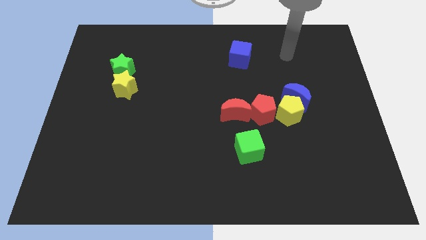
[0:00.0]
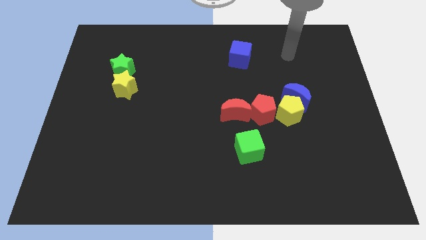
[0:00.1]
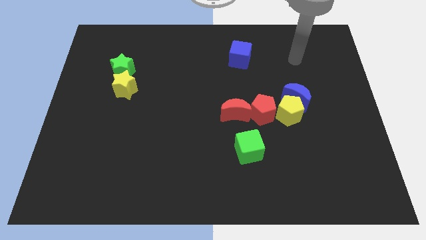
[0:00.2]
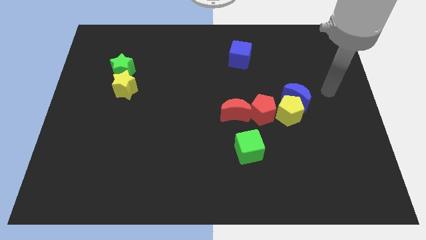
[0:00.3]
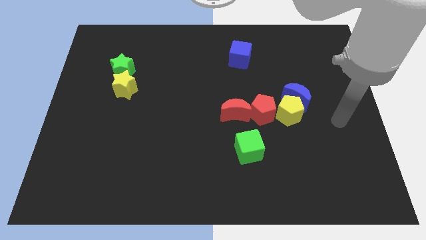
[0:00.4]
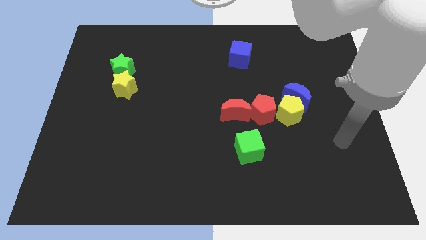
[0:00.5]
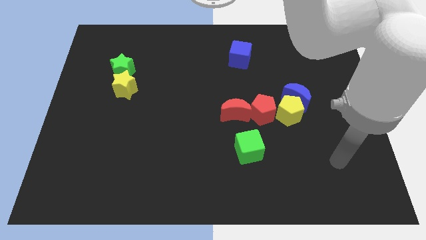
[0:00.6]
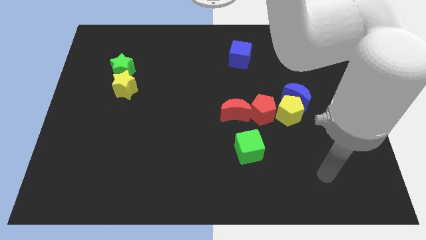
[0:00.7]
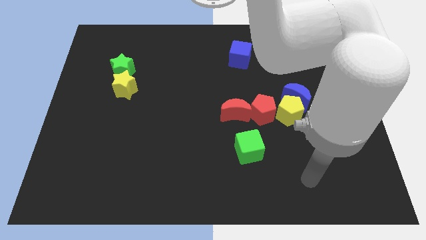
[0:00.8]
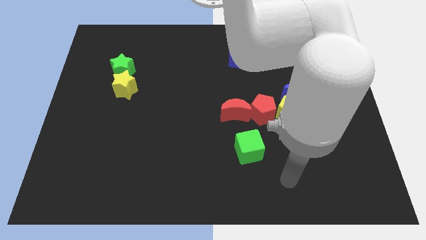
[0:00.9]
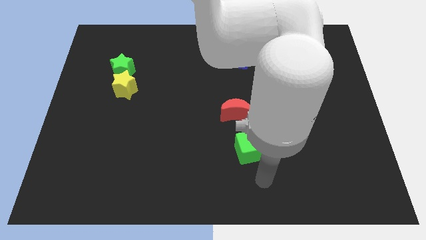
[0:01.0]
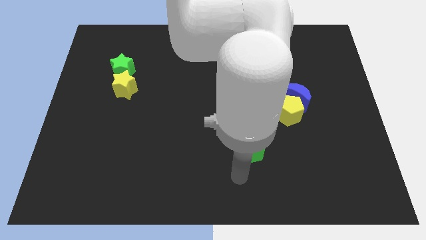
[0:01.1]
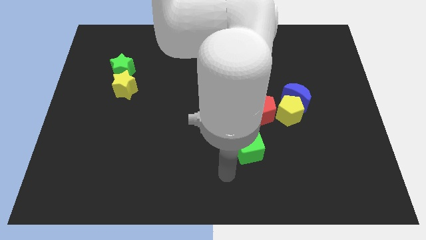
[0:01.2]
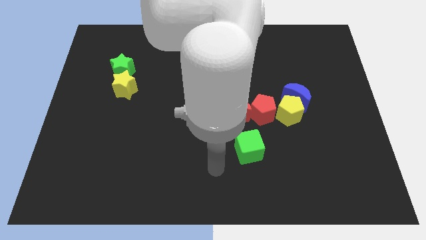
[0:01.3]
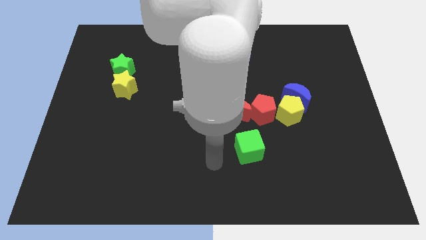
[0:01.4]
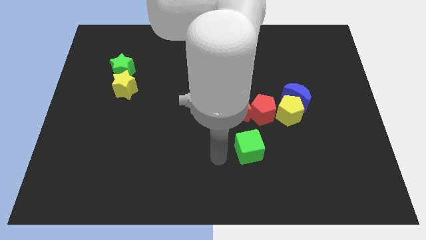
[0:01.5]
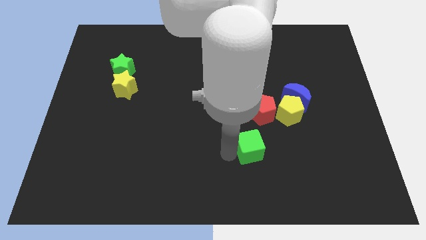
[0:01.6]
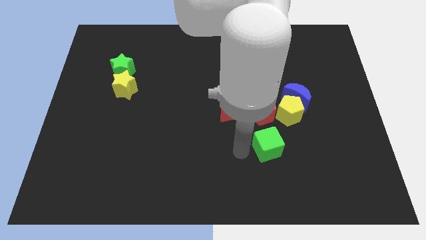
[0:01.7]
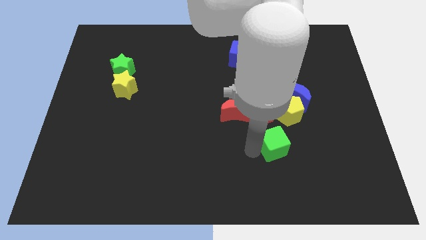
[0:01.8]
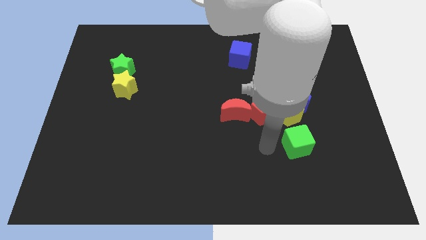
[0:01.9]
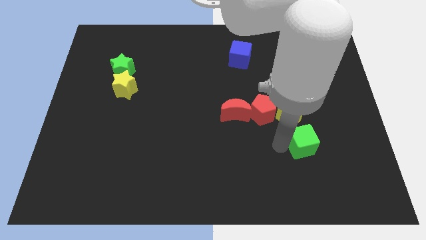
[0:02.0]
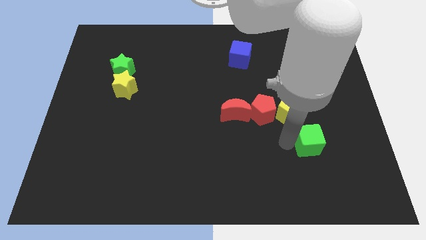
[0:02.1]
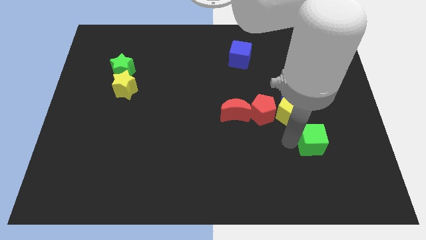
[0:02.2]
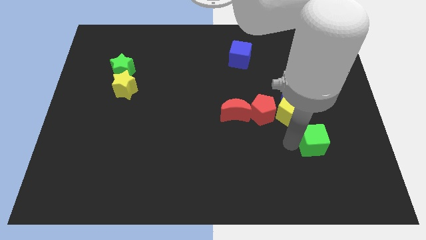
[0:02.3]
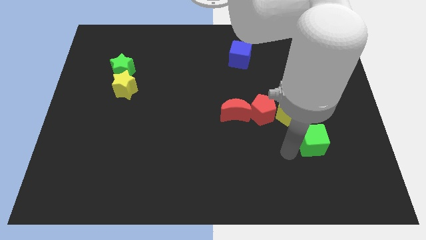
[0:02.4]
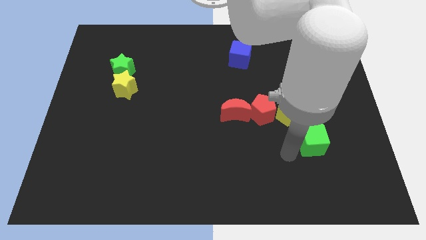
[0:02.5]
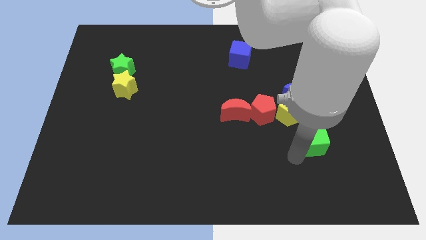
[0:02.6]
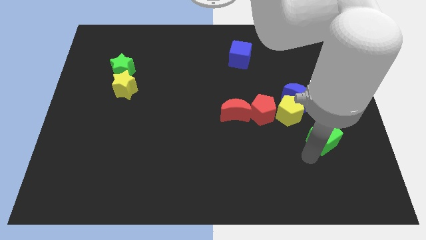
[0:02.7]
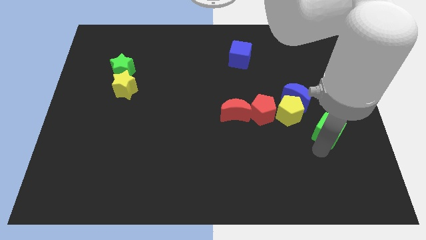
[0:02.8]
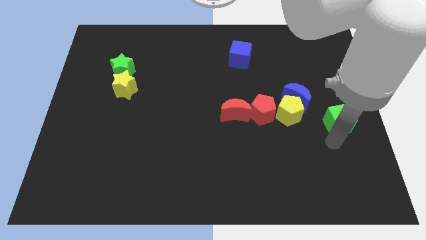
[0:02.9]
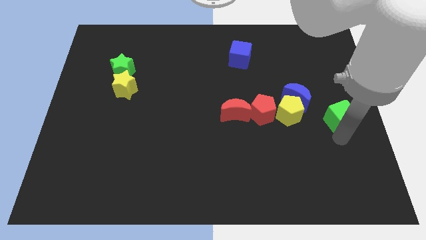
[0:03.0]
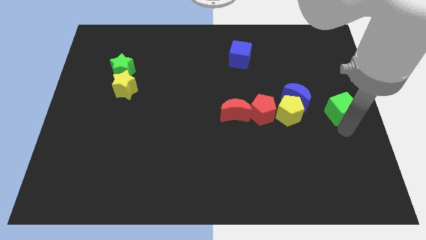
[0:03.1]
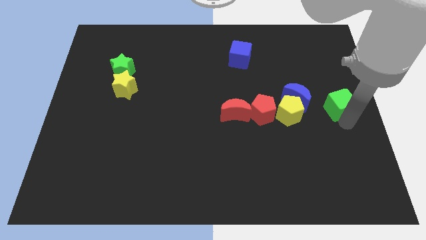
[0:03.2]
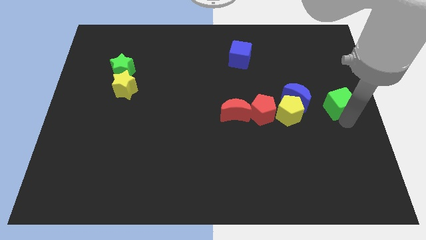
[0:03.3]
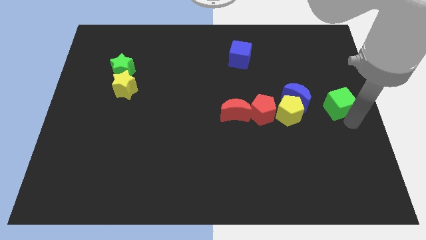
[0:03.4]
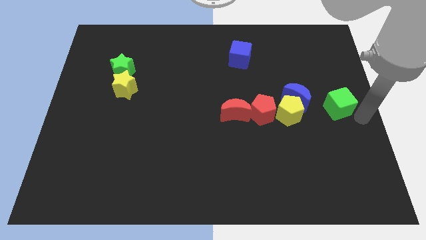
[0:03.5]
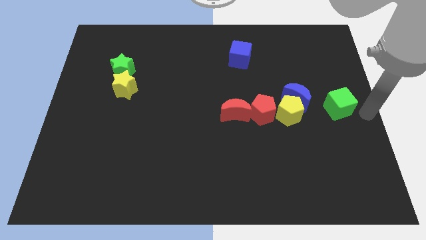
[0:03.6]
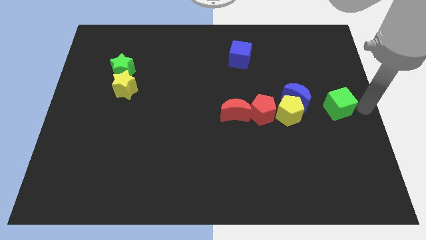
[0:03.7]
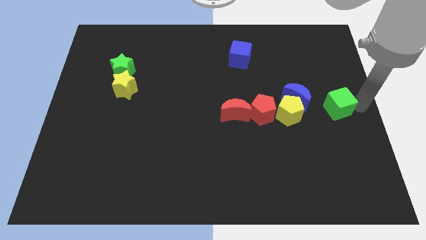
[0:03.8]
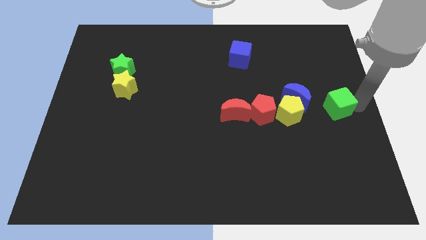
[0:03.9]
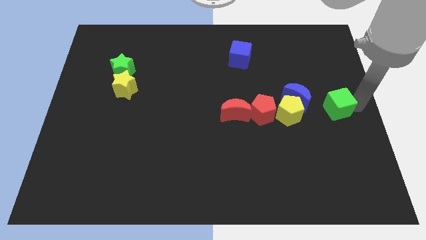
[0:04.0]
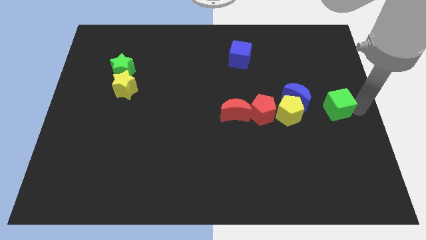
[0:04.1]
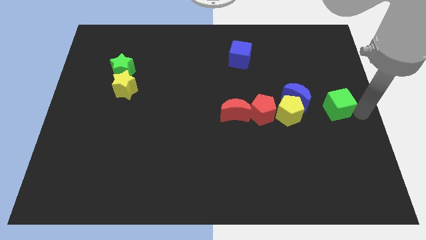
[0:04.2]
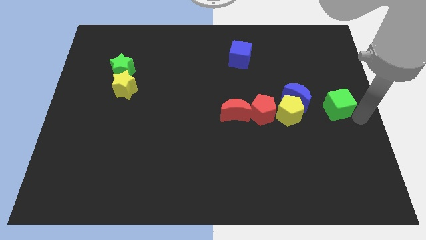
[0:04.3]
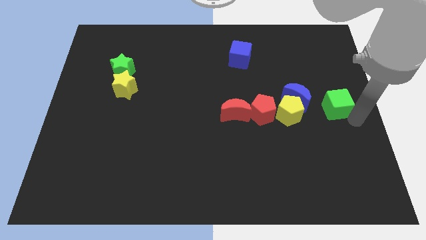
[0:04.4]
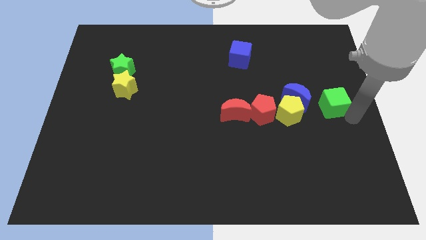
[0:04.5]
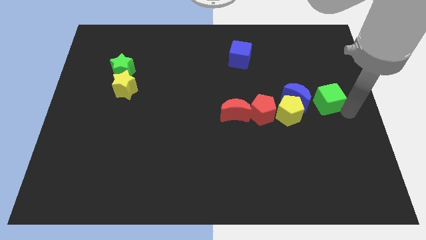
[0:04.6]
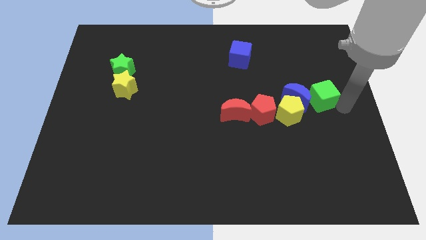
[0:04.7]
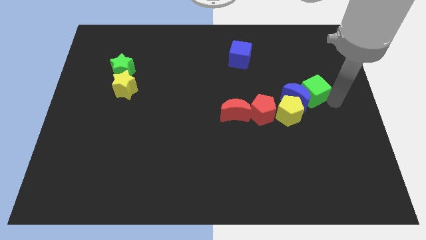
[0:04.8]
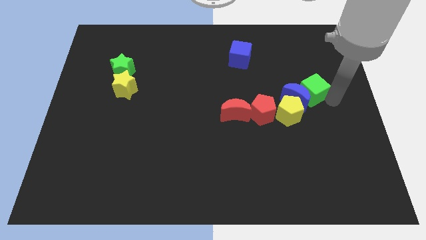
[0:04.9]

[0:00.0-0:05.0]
push the green cube to the blue moon

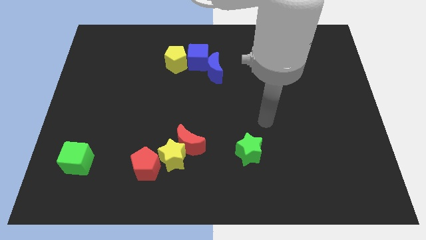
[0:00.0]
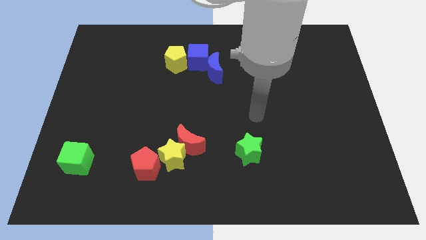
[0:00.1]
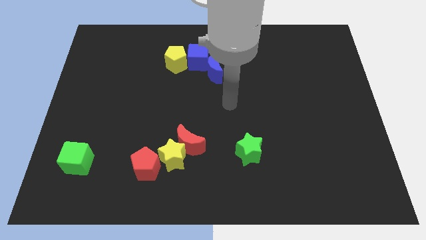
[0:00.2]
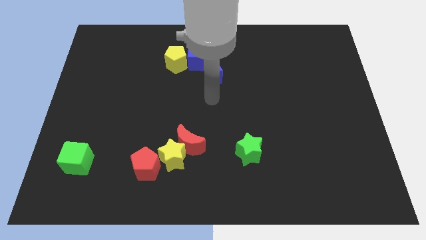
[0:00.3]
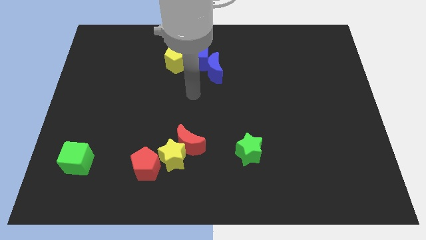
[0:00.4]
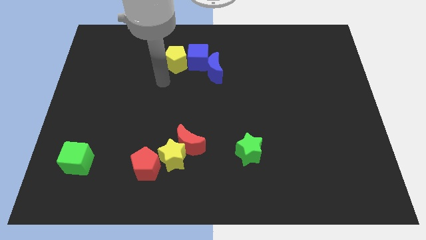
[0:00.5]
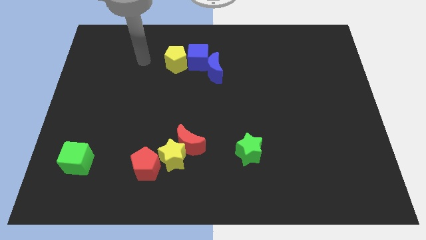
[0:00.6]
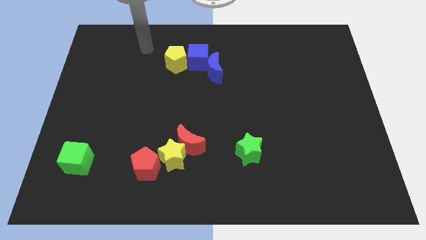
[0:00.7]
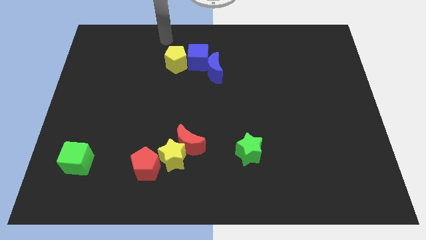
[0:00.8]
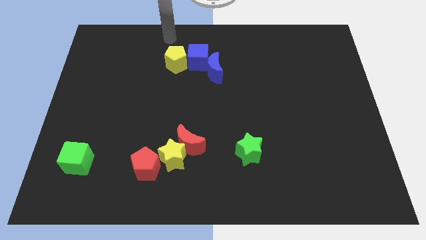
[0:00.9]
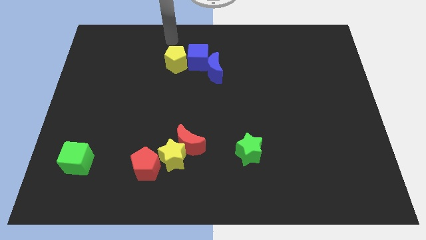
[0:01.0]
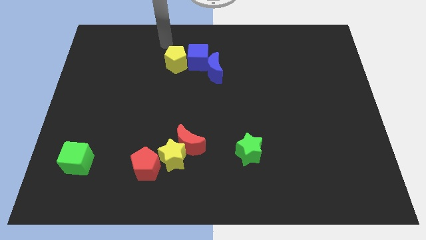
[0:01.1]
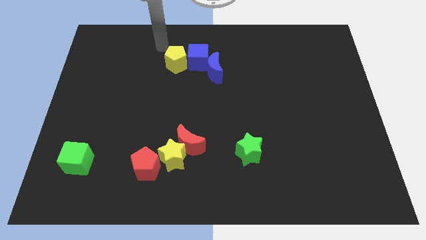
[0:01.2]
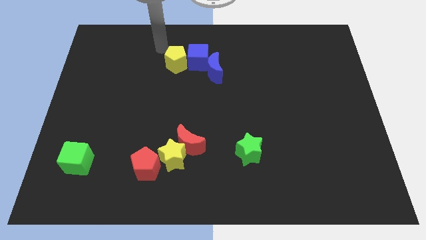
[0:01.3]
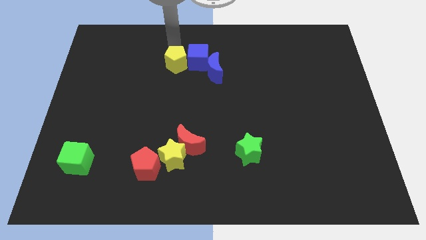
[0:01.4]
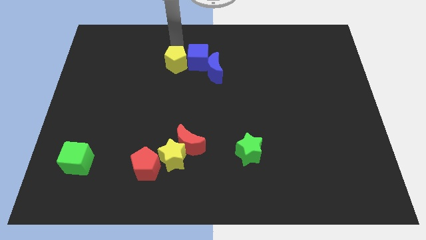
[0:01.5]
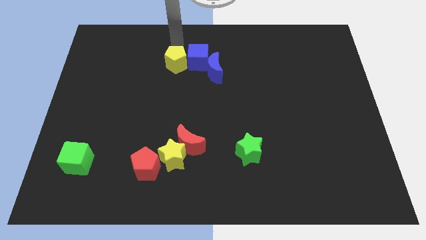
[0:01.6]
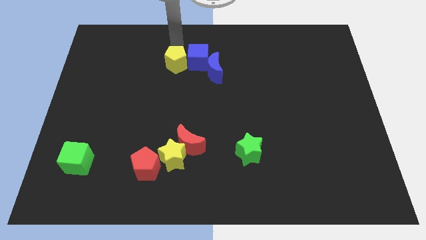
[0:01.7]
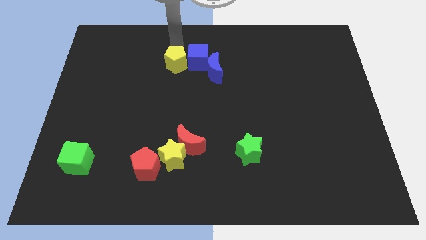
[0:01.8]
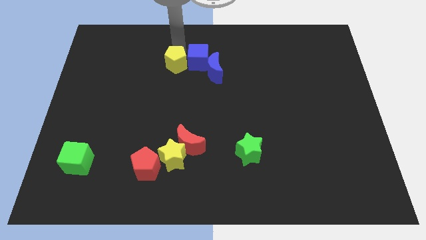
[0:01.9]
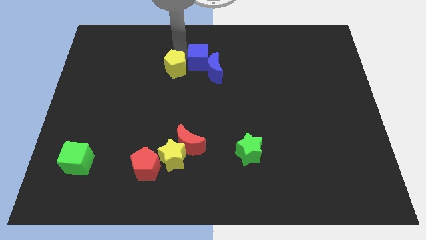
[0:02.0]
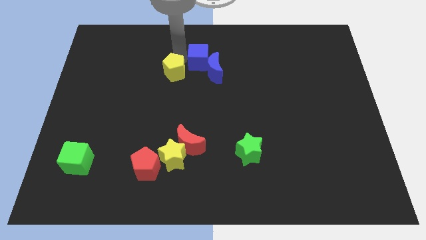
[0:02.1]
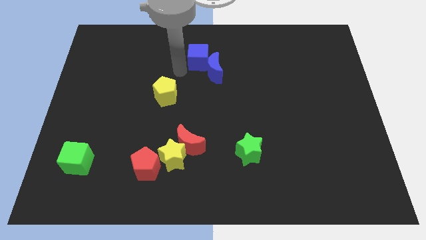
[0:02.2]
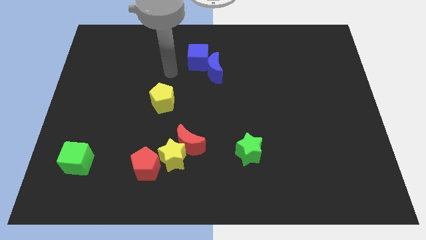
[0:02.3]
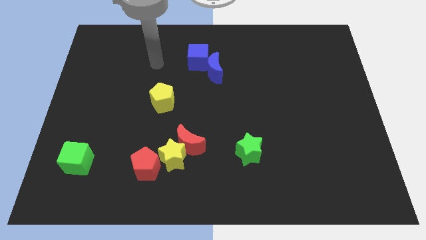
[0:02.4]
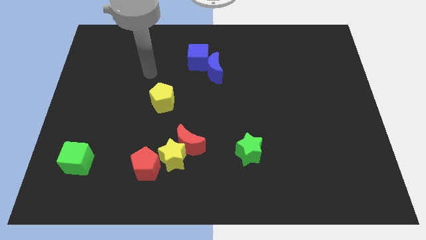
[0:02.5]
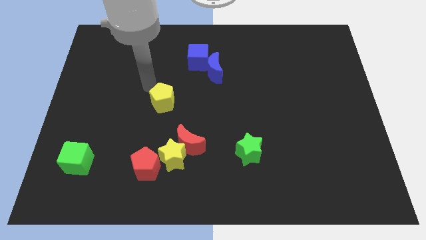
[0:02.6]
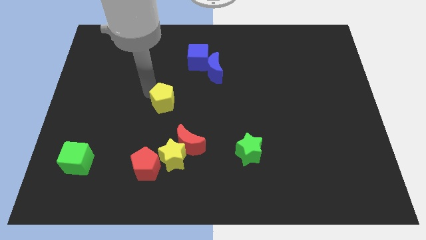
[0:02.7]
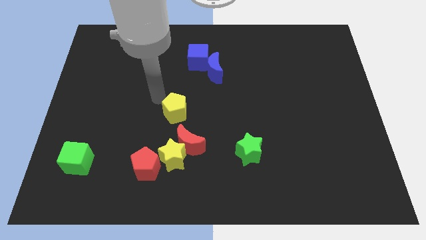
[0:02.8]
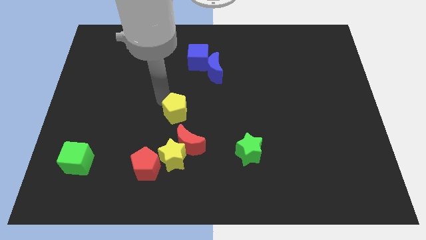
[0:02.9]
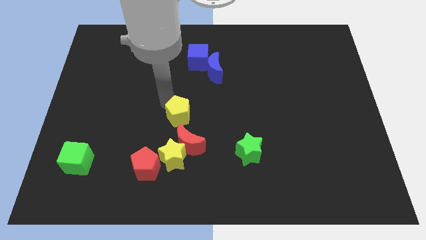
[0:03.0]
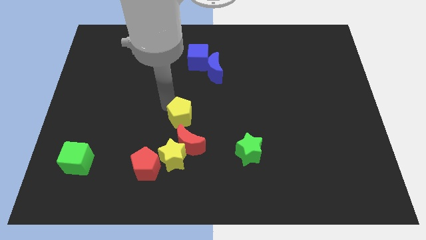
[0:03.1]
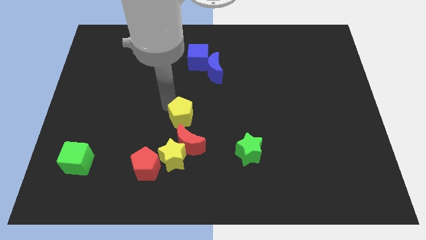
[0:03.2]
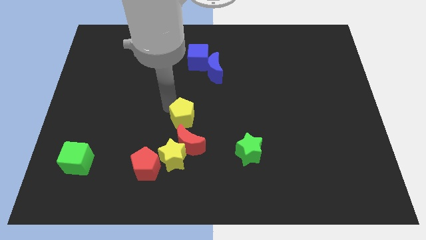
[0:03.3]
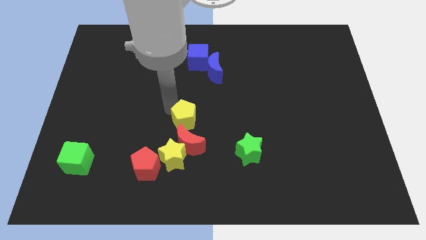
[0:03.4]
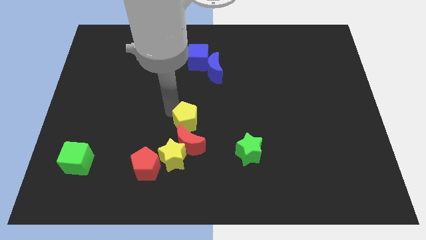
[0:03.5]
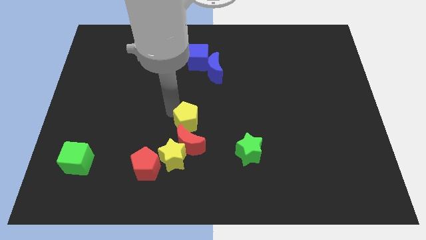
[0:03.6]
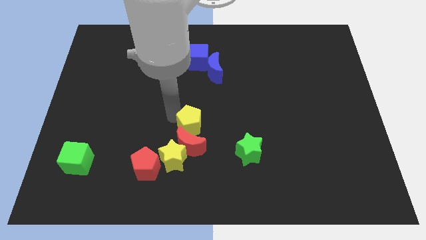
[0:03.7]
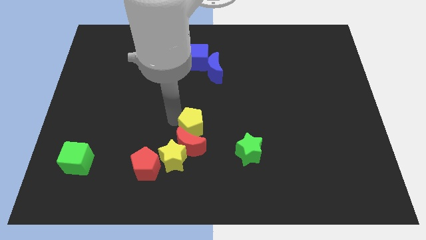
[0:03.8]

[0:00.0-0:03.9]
move the yellow pentagon next to the red moon
